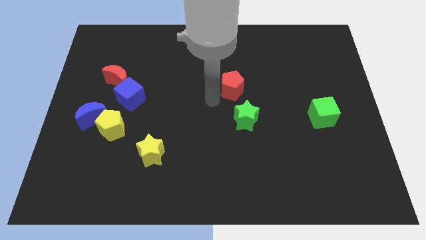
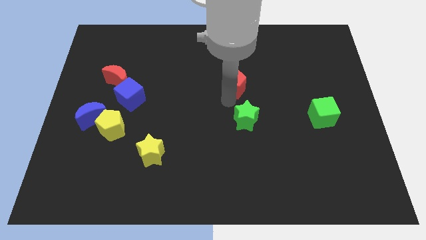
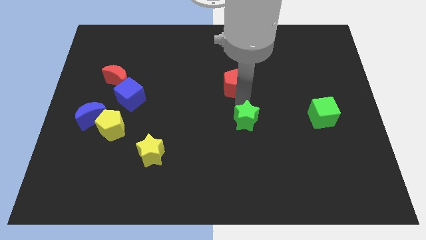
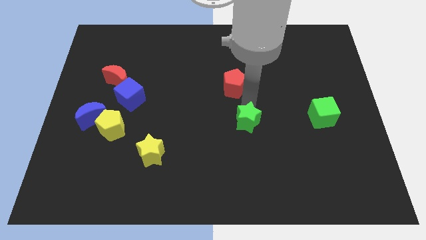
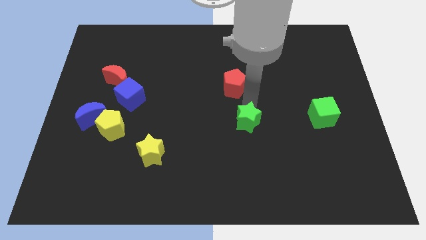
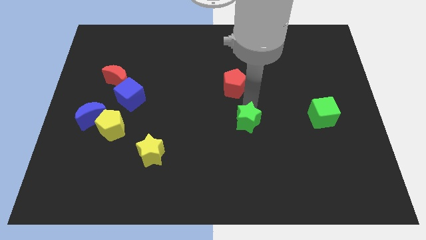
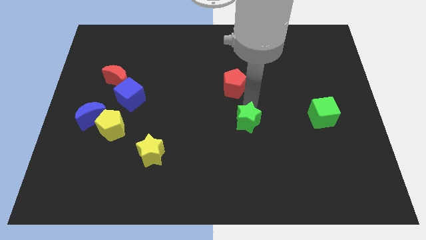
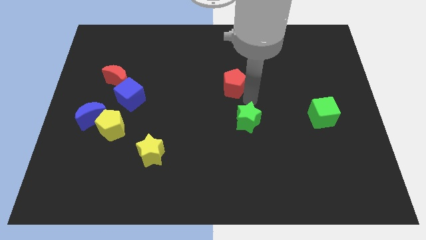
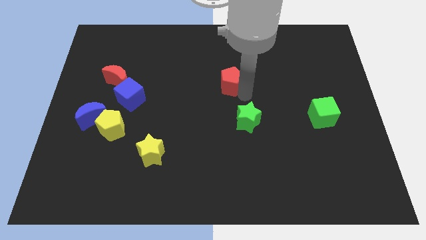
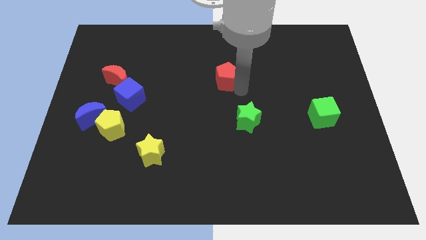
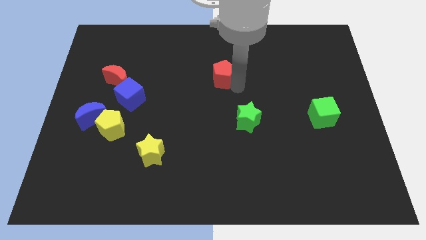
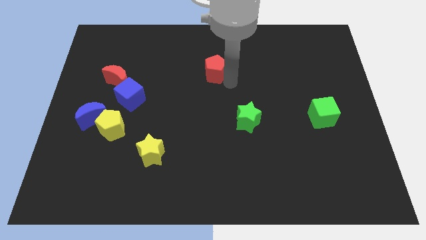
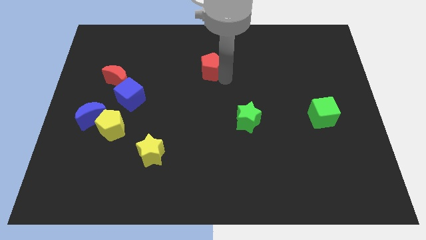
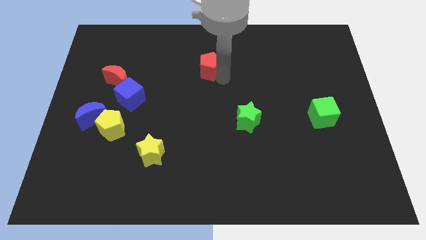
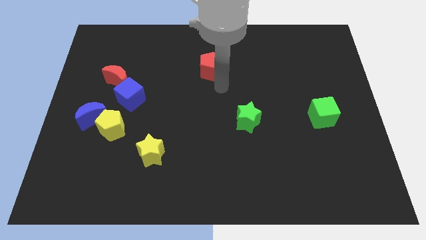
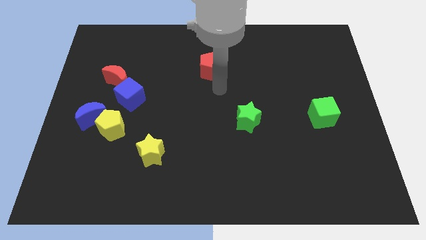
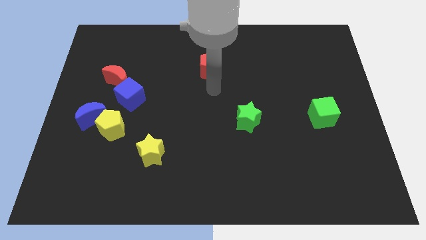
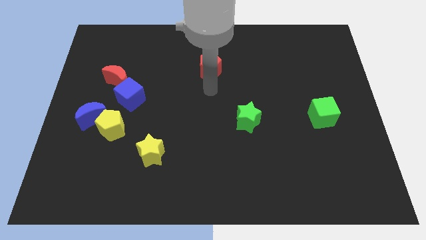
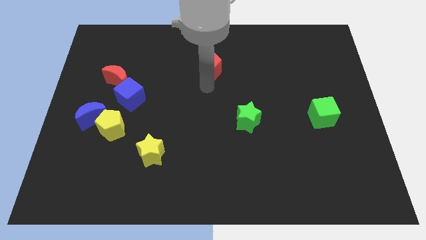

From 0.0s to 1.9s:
push the red pentagon upwards

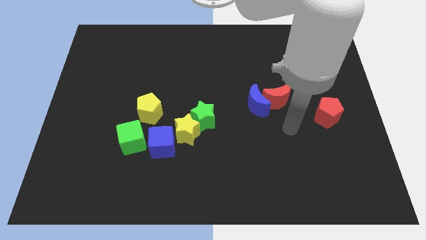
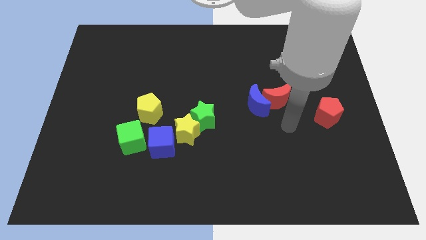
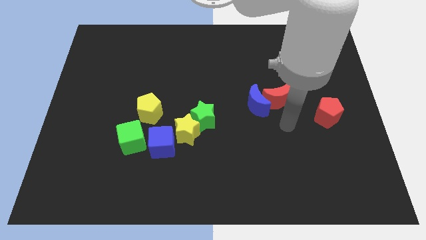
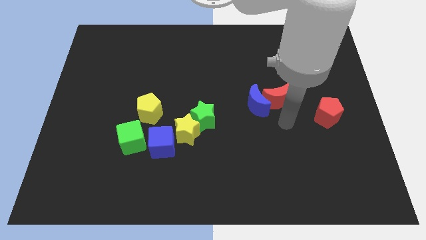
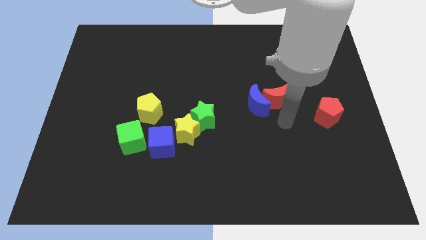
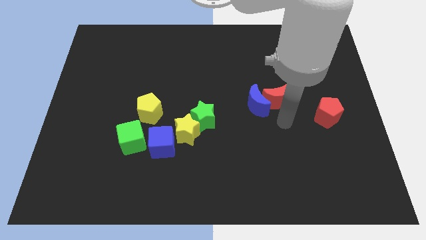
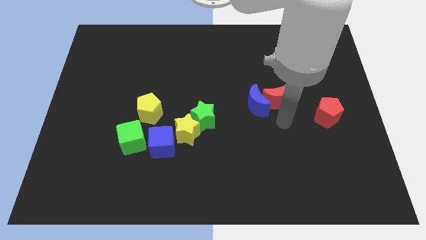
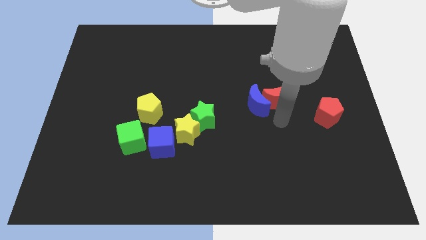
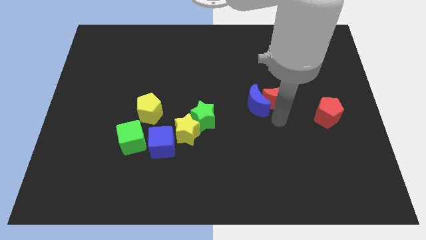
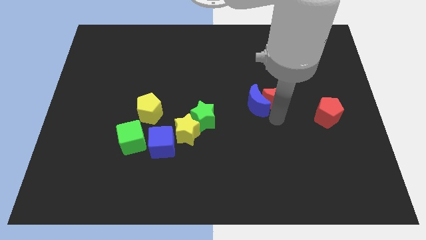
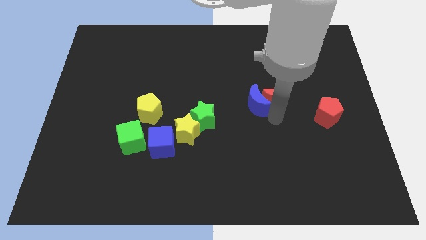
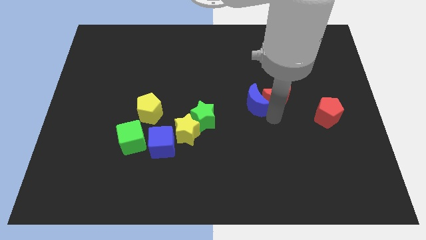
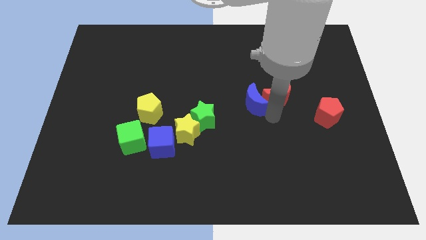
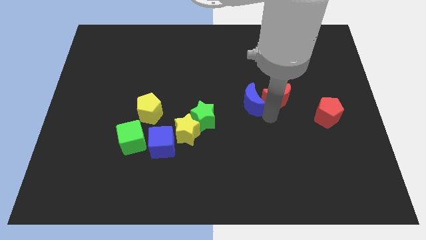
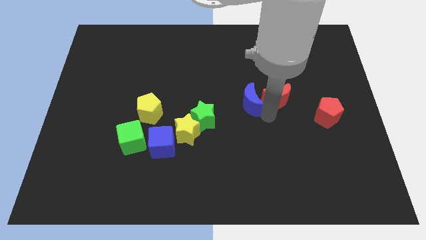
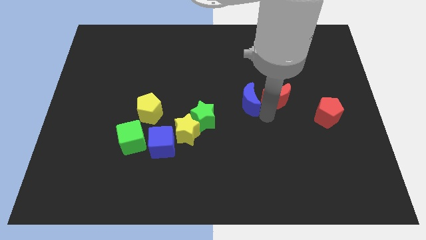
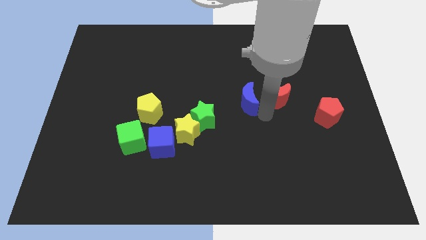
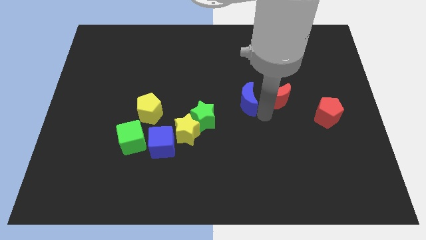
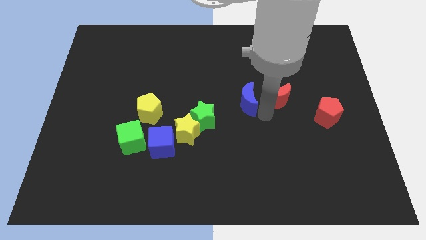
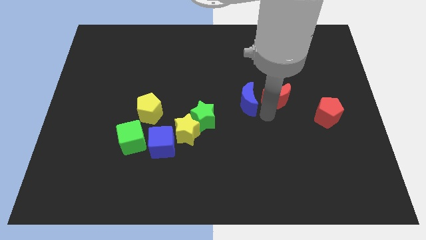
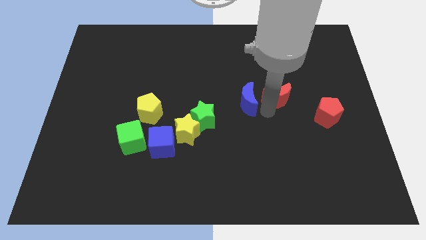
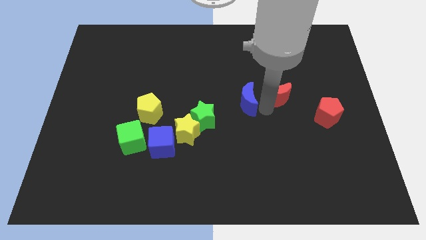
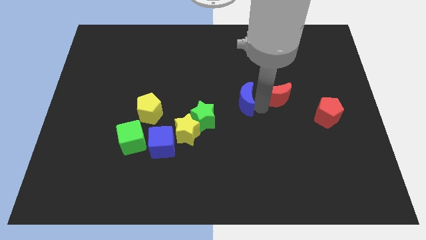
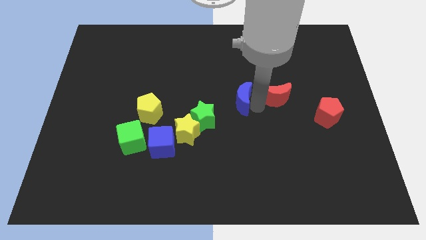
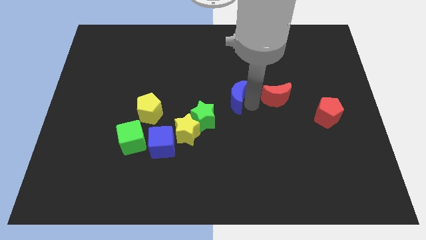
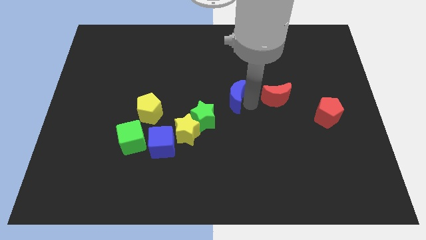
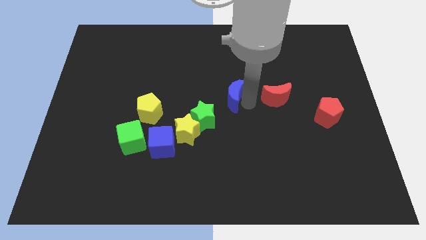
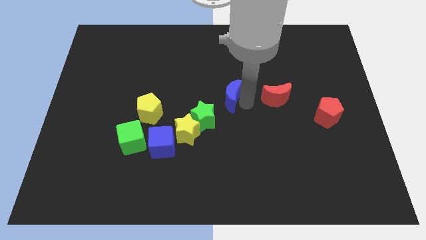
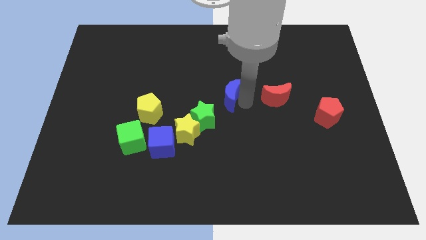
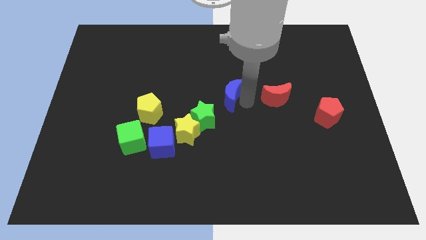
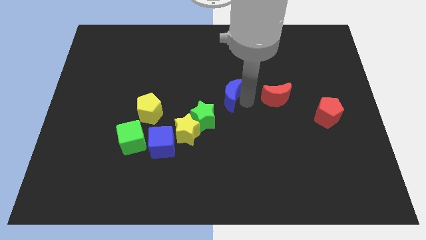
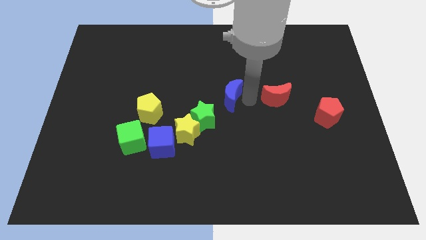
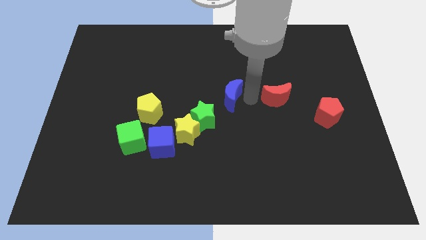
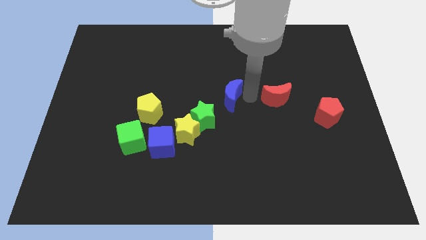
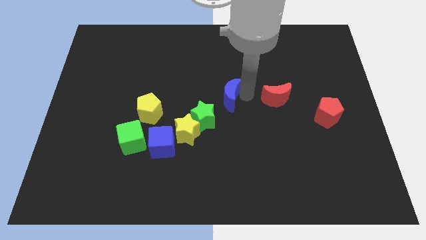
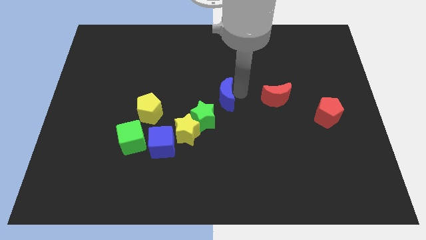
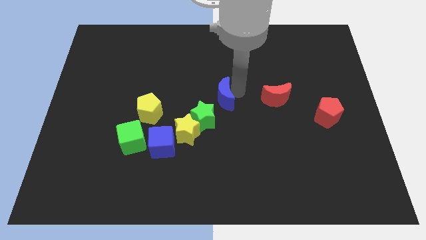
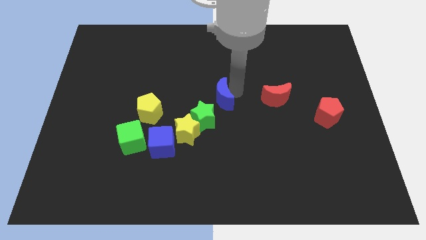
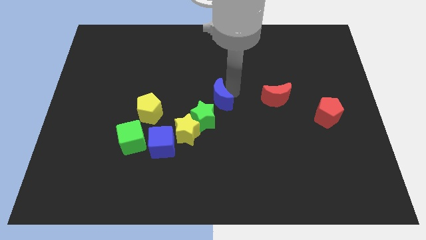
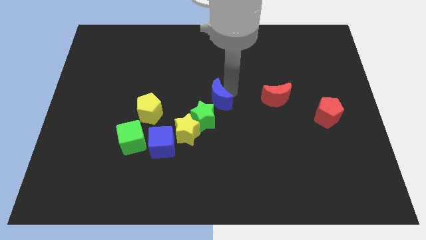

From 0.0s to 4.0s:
move the blue moon close to the green star

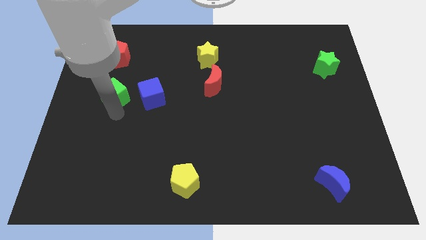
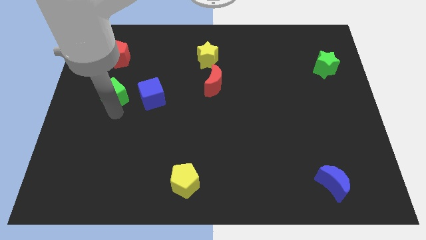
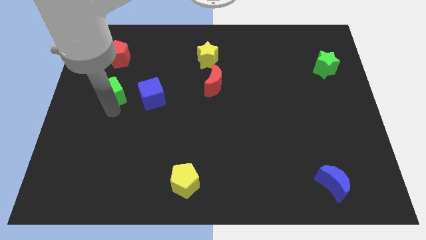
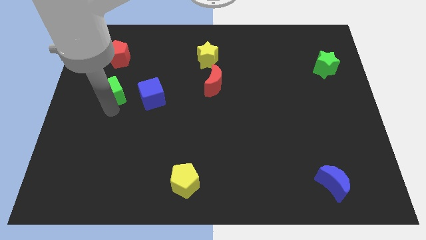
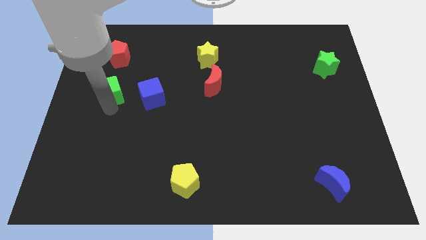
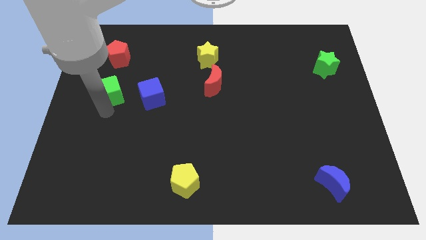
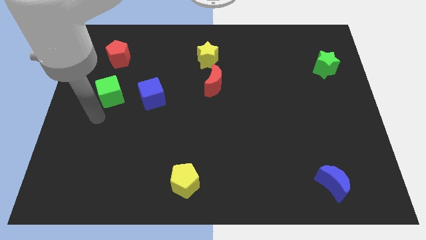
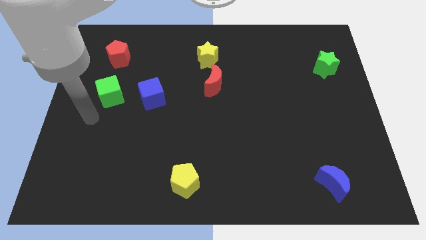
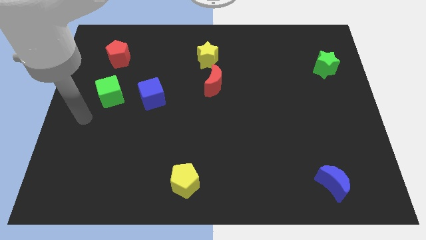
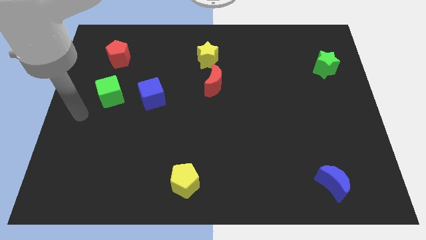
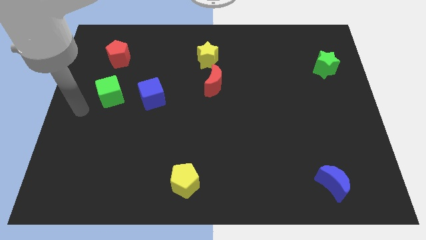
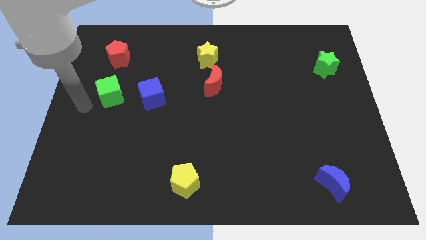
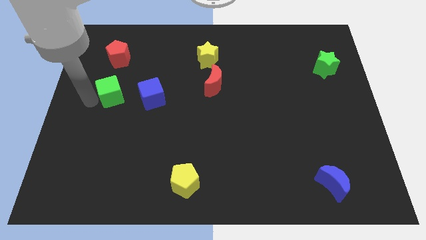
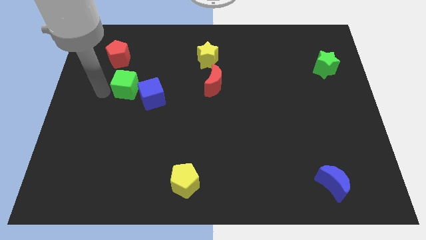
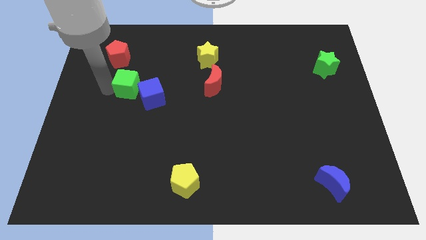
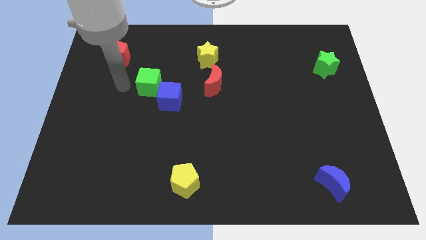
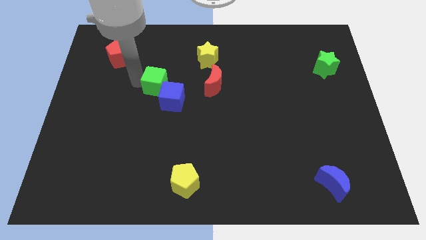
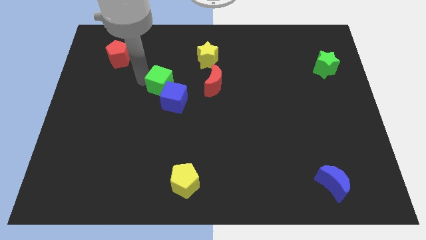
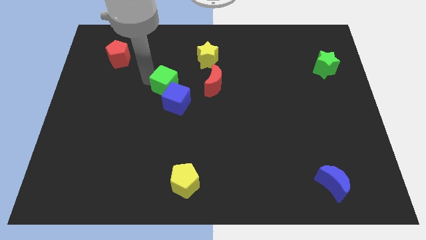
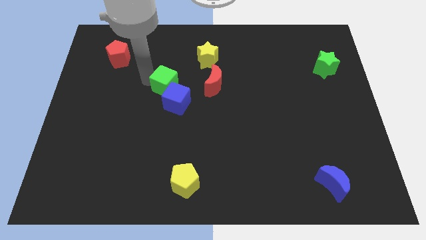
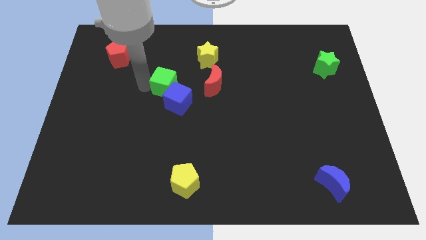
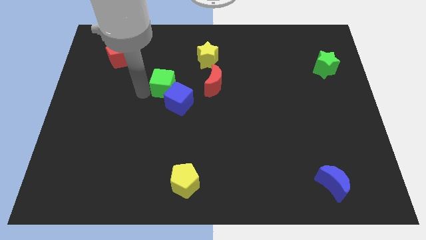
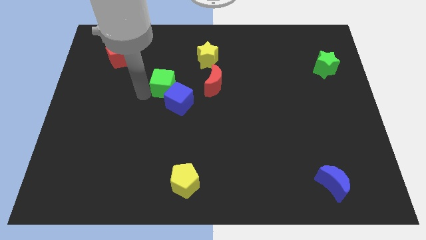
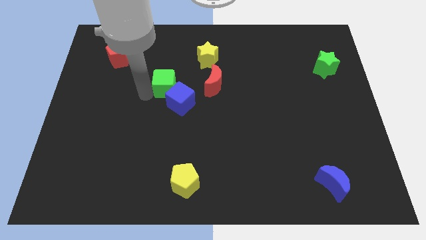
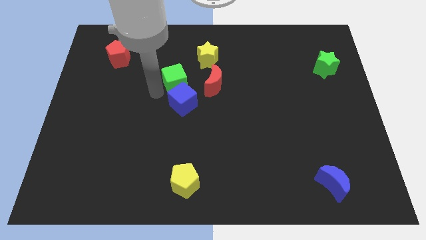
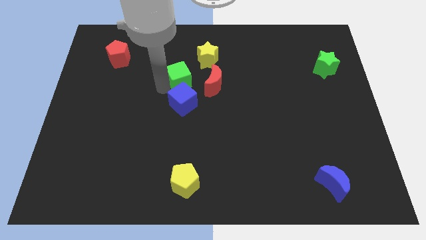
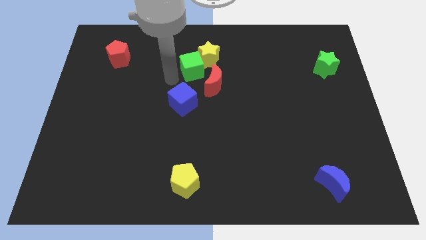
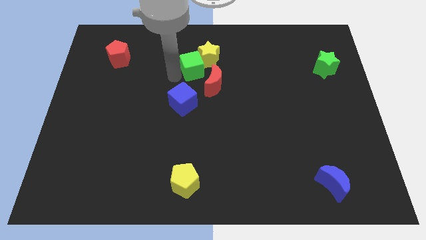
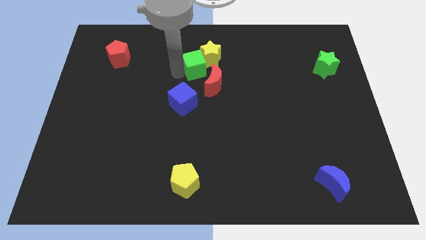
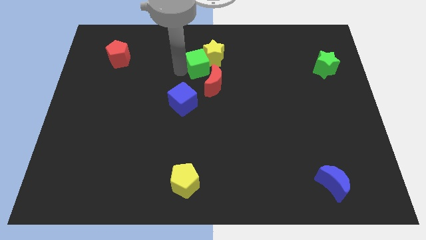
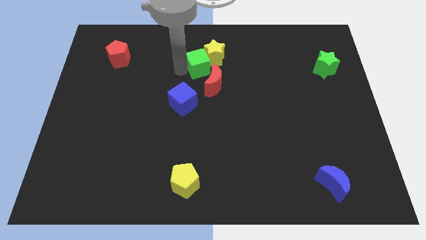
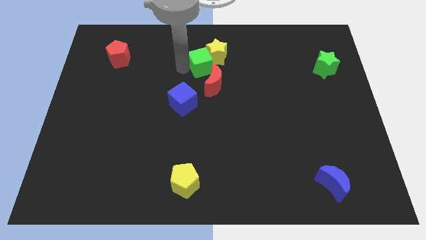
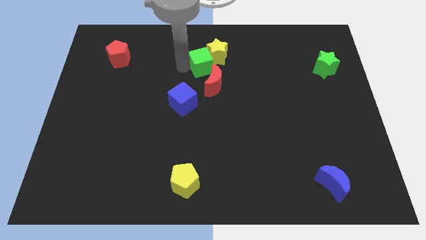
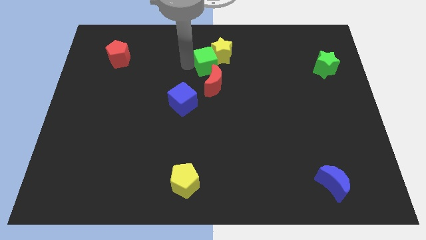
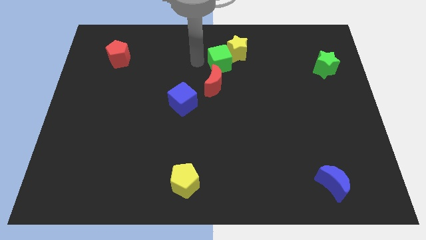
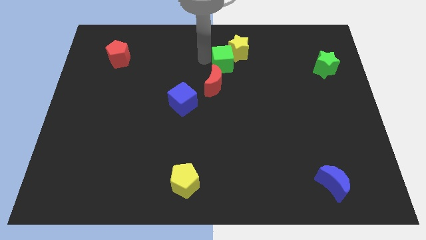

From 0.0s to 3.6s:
place green cube on the top of red crescent
